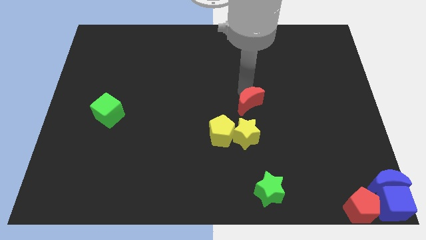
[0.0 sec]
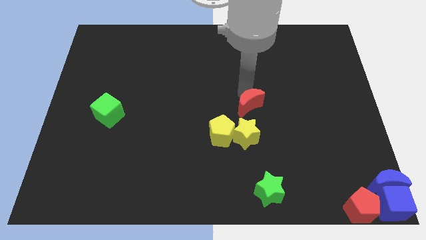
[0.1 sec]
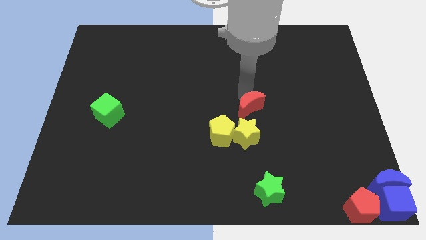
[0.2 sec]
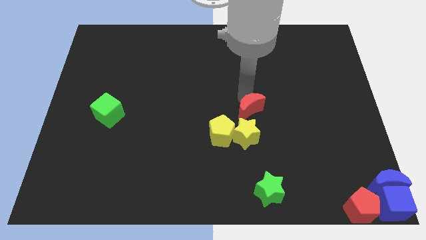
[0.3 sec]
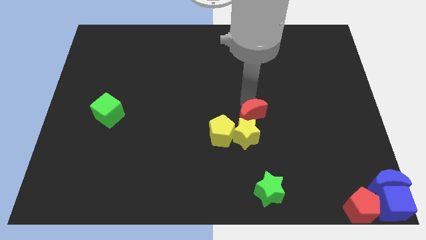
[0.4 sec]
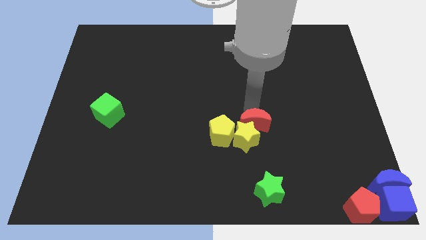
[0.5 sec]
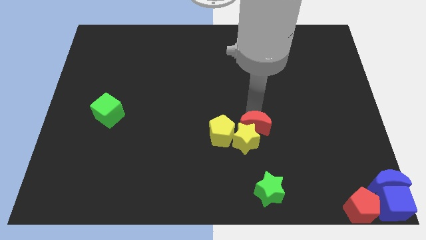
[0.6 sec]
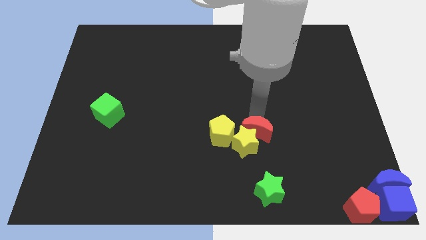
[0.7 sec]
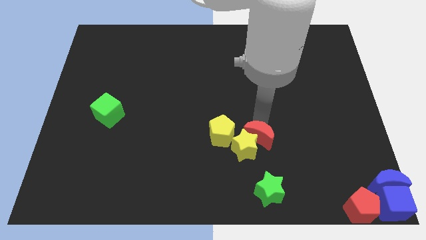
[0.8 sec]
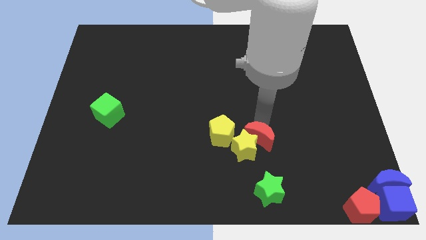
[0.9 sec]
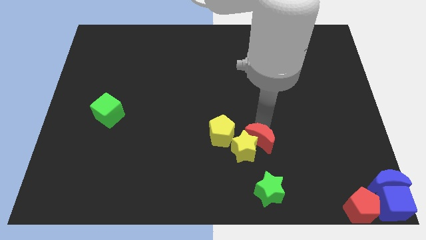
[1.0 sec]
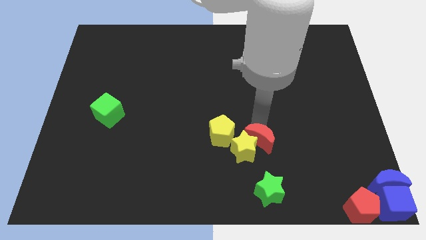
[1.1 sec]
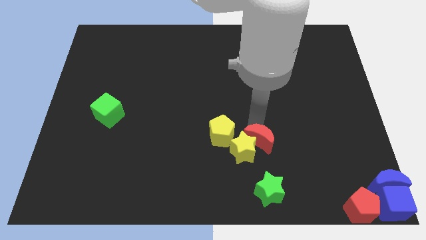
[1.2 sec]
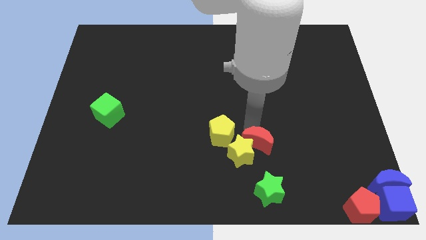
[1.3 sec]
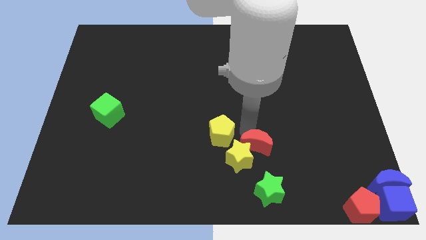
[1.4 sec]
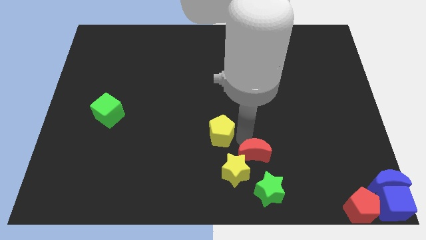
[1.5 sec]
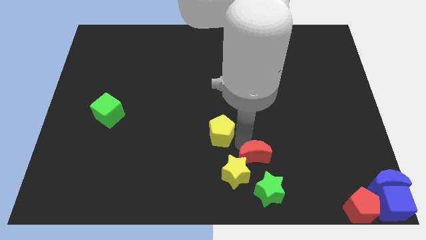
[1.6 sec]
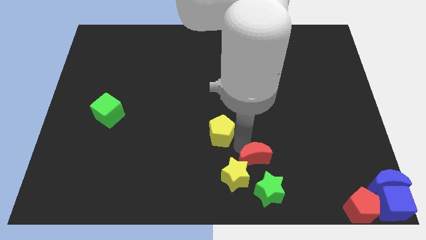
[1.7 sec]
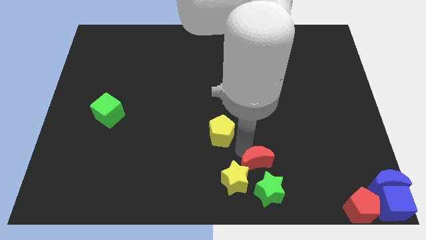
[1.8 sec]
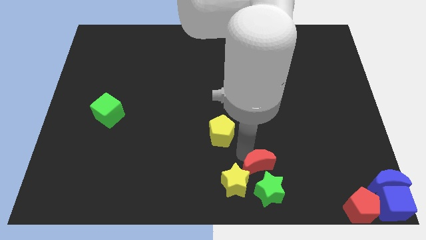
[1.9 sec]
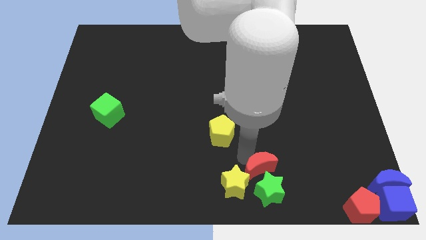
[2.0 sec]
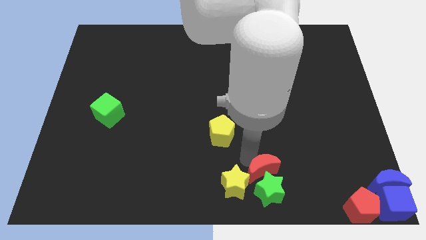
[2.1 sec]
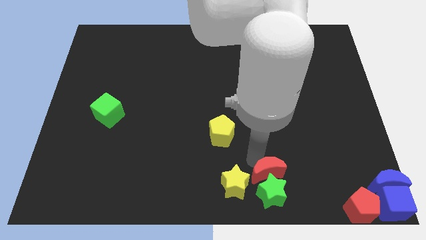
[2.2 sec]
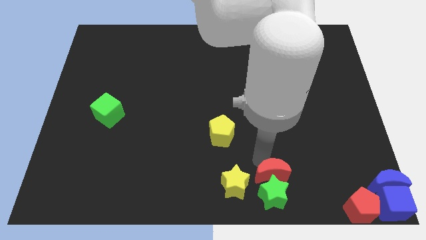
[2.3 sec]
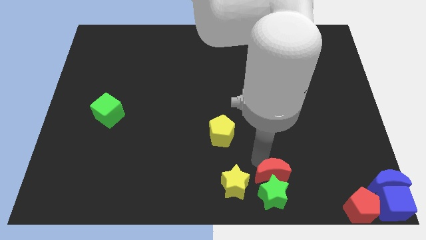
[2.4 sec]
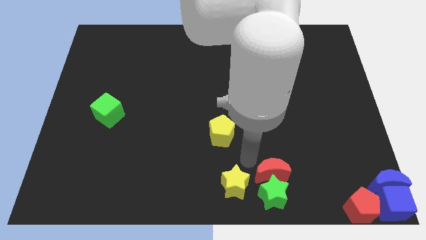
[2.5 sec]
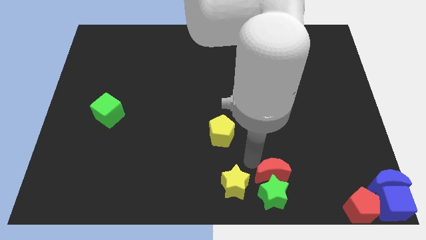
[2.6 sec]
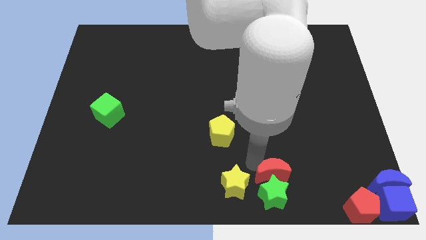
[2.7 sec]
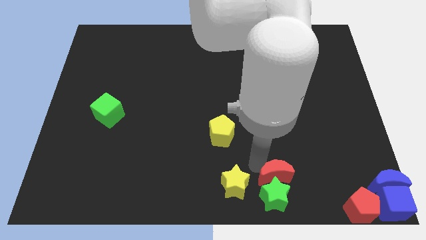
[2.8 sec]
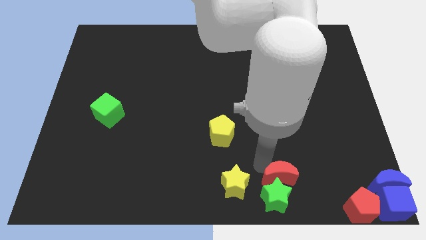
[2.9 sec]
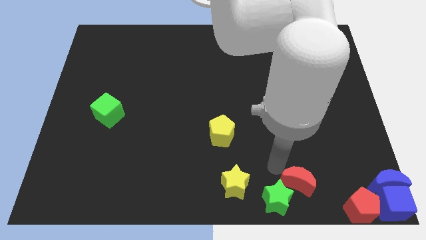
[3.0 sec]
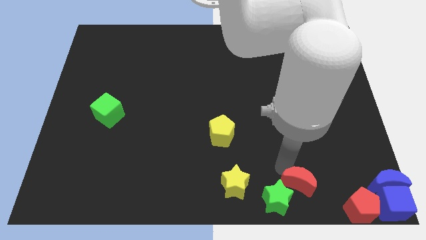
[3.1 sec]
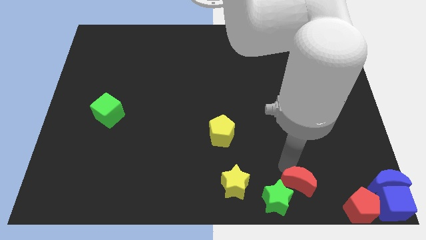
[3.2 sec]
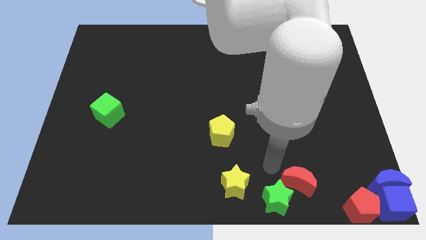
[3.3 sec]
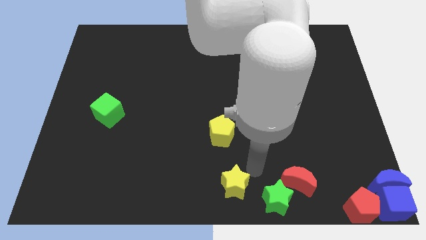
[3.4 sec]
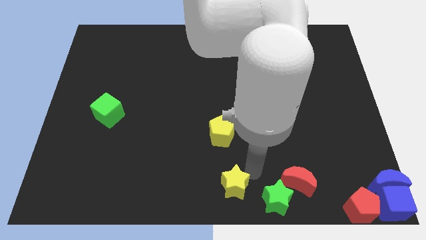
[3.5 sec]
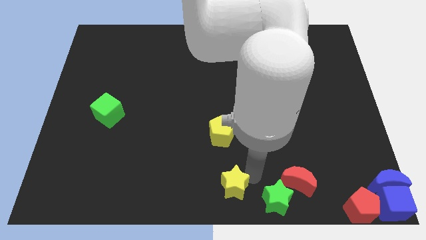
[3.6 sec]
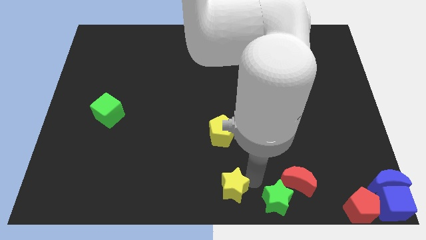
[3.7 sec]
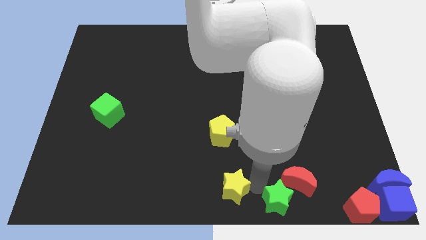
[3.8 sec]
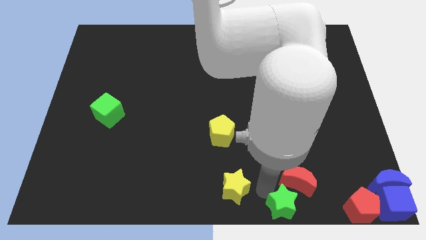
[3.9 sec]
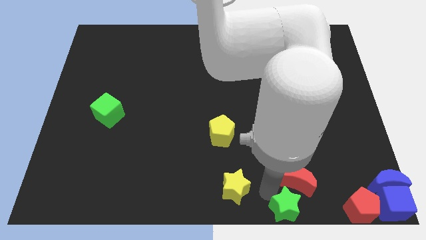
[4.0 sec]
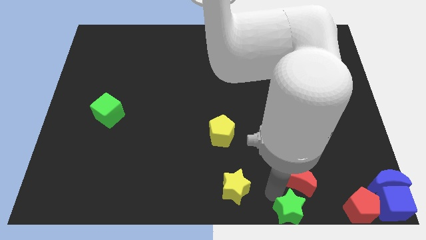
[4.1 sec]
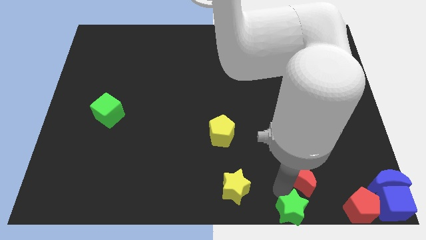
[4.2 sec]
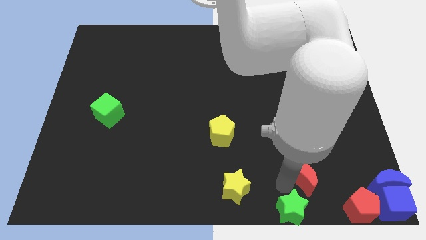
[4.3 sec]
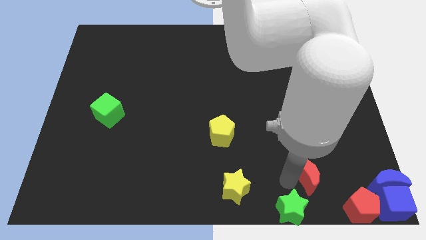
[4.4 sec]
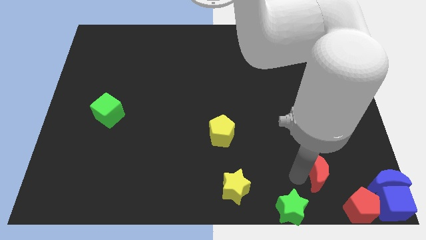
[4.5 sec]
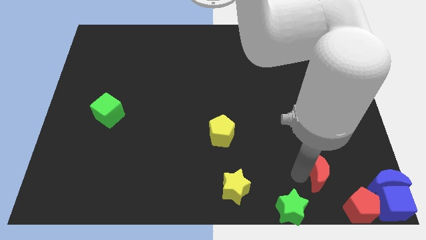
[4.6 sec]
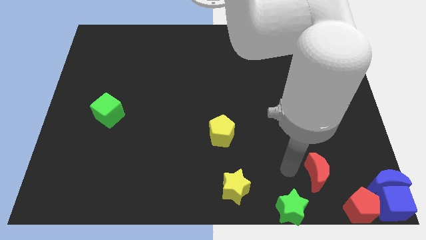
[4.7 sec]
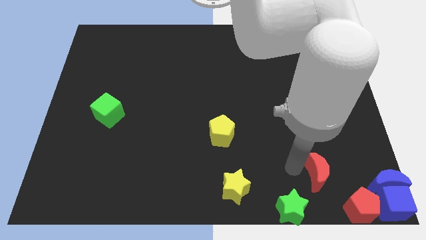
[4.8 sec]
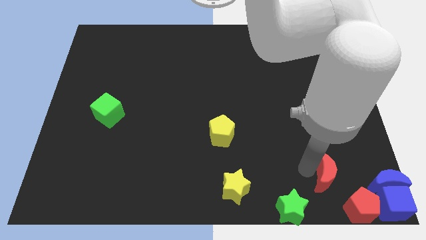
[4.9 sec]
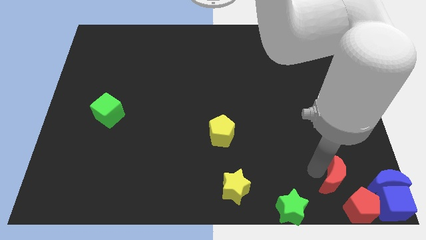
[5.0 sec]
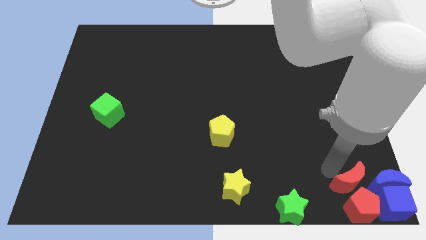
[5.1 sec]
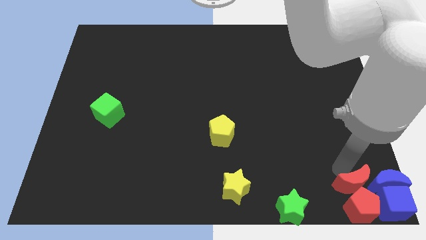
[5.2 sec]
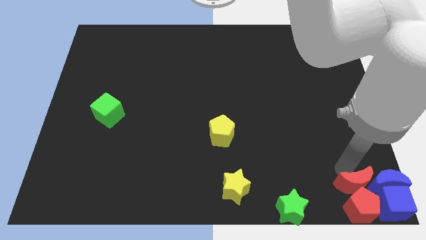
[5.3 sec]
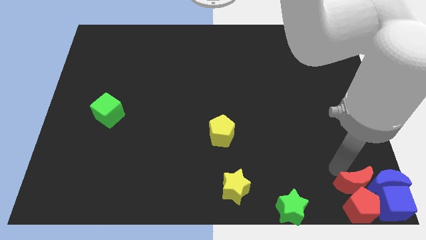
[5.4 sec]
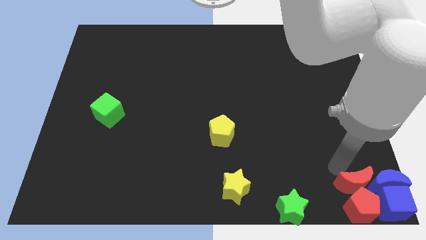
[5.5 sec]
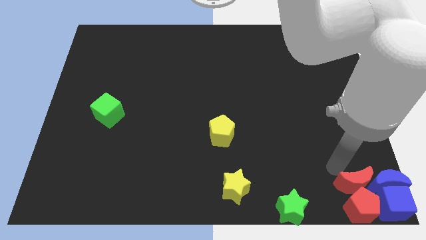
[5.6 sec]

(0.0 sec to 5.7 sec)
push red moon towards red pentagon

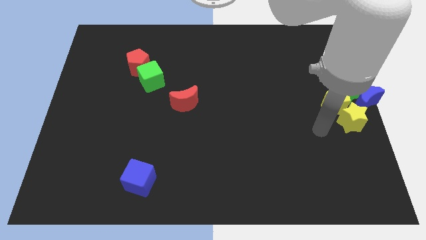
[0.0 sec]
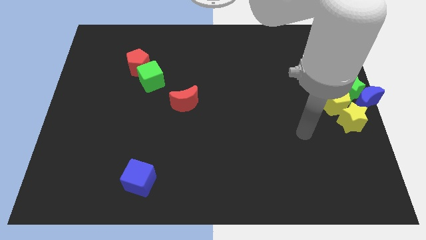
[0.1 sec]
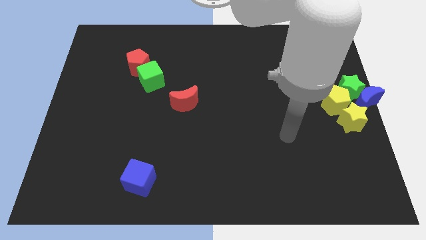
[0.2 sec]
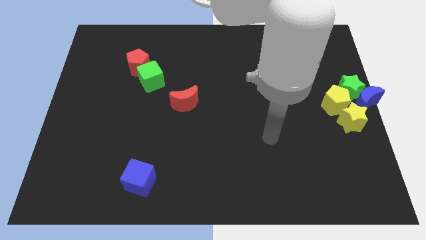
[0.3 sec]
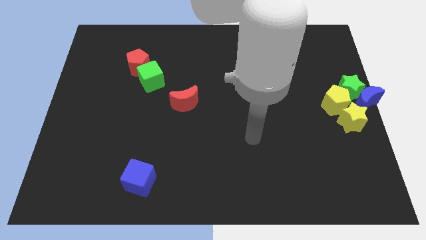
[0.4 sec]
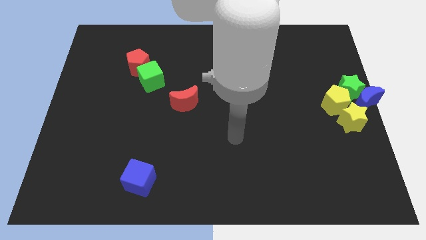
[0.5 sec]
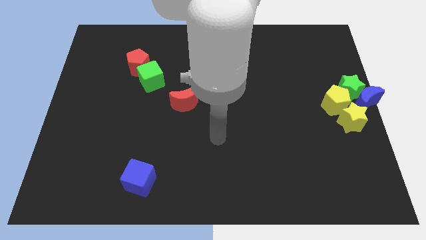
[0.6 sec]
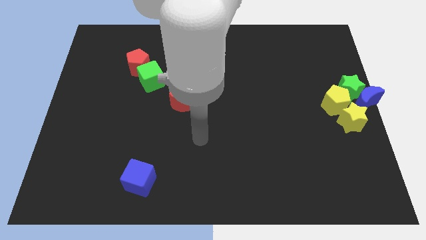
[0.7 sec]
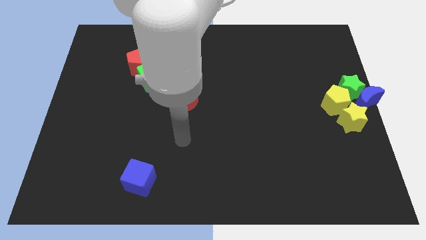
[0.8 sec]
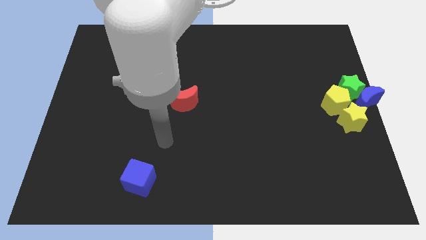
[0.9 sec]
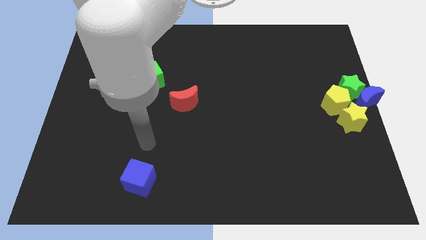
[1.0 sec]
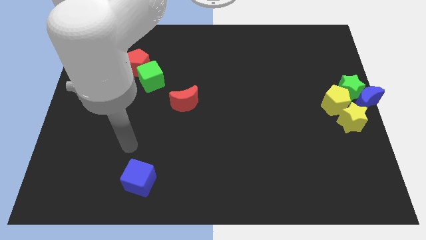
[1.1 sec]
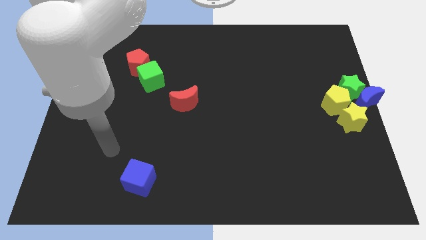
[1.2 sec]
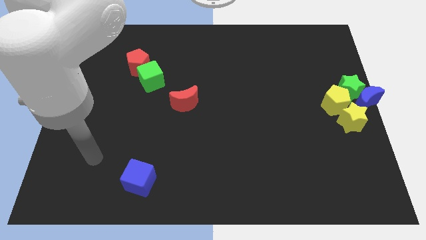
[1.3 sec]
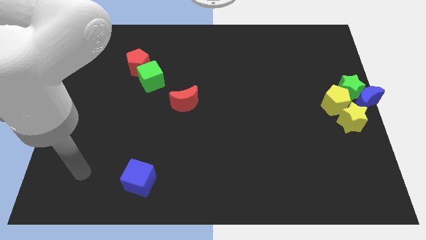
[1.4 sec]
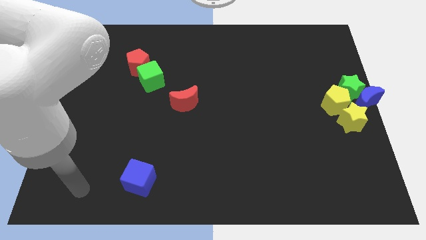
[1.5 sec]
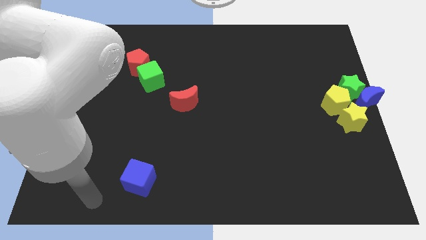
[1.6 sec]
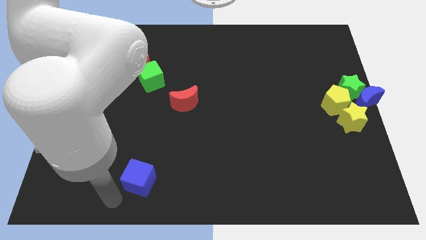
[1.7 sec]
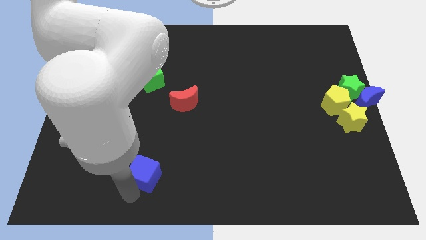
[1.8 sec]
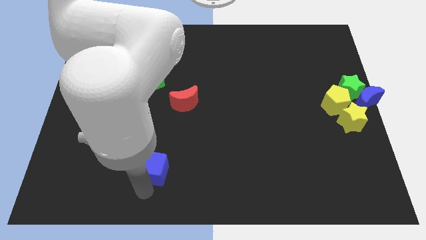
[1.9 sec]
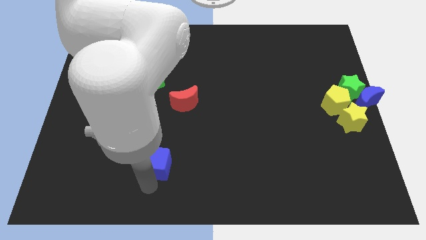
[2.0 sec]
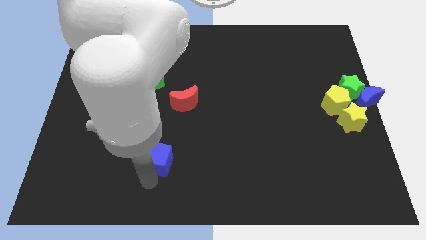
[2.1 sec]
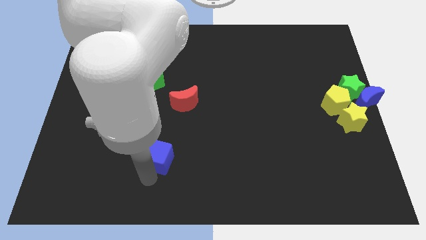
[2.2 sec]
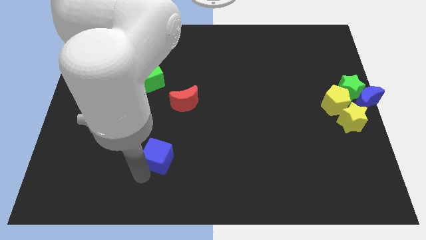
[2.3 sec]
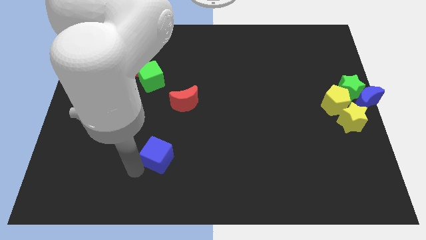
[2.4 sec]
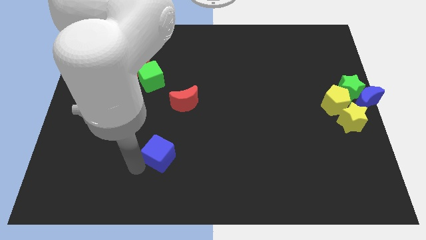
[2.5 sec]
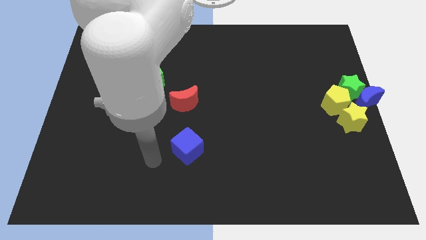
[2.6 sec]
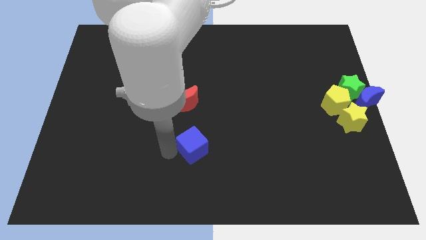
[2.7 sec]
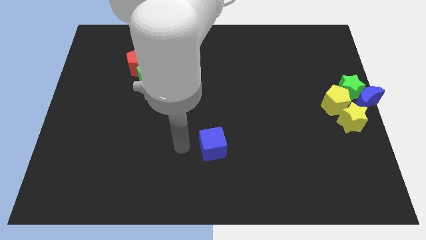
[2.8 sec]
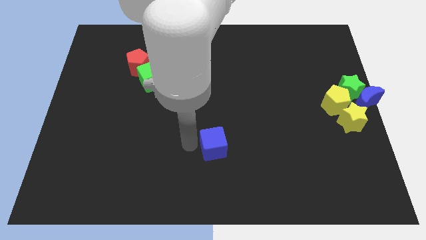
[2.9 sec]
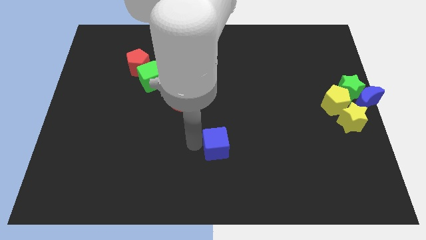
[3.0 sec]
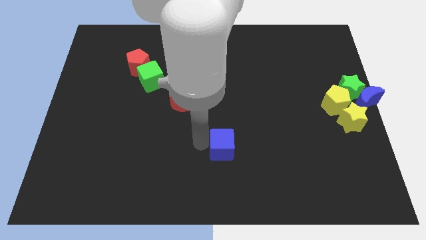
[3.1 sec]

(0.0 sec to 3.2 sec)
push blue cube towards center of the board
